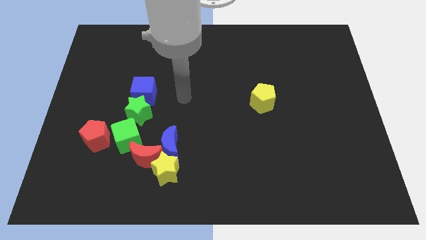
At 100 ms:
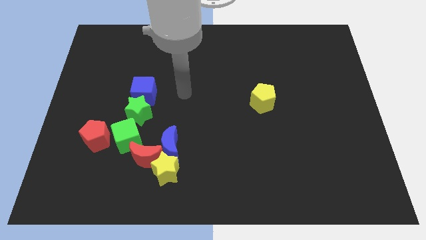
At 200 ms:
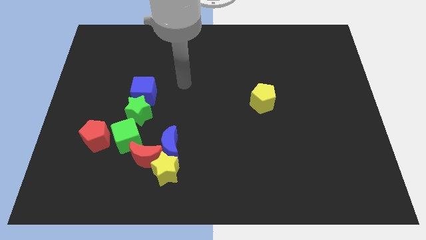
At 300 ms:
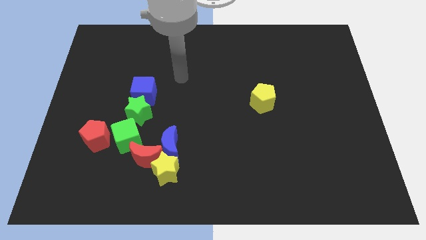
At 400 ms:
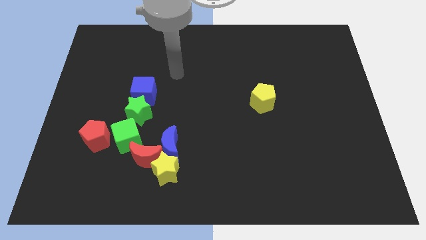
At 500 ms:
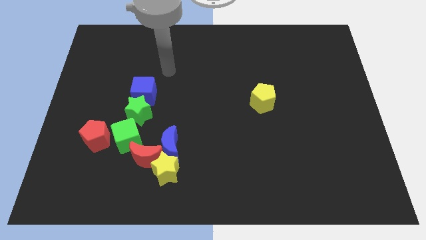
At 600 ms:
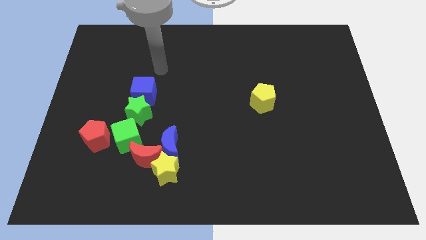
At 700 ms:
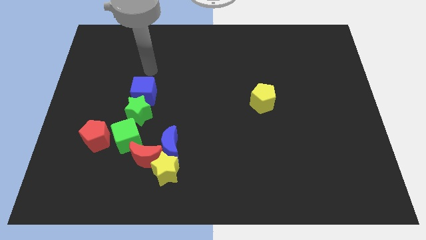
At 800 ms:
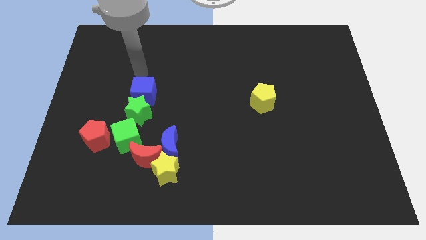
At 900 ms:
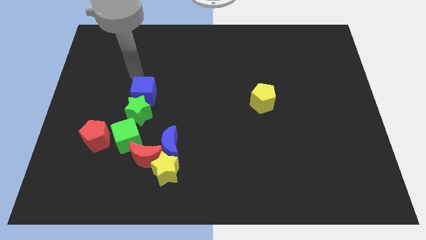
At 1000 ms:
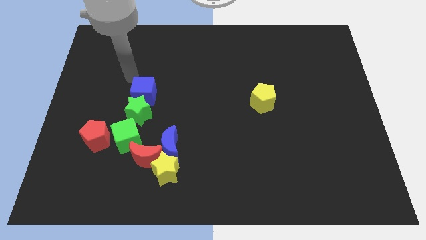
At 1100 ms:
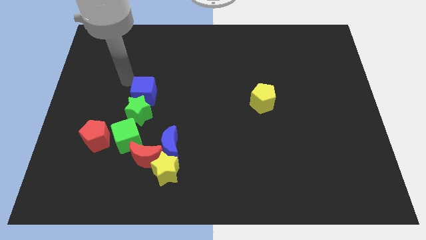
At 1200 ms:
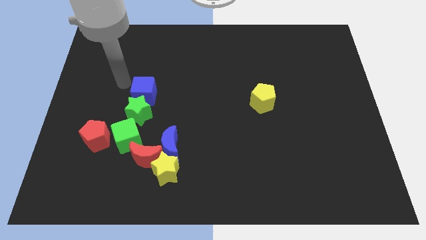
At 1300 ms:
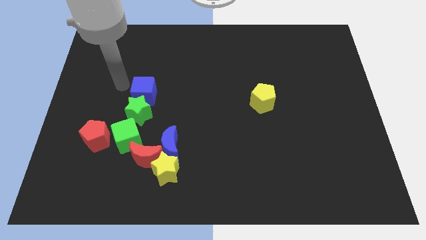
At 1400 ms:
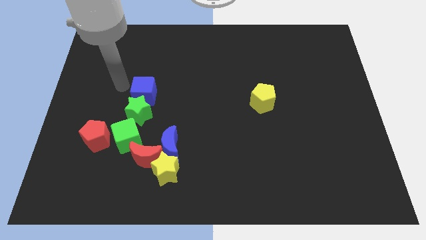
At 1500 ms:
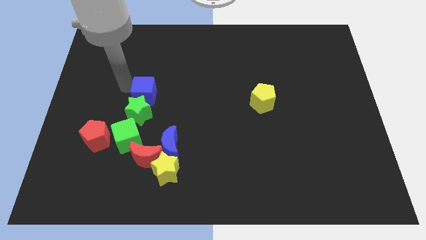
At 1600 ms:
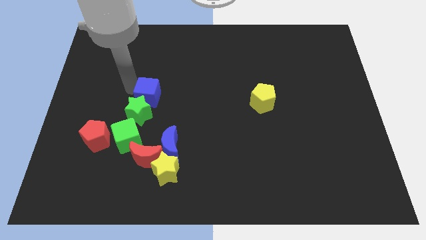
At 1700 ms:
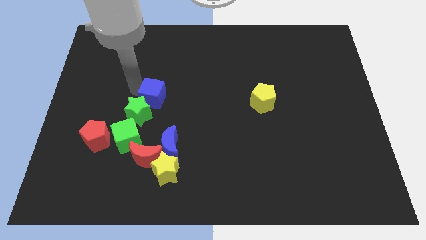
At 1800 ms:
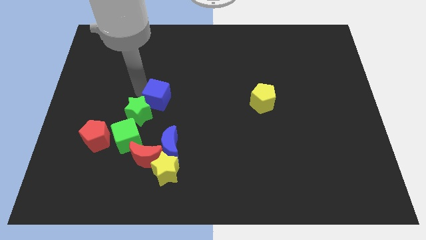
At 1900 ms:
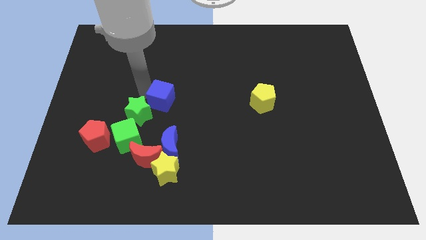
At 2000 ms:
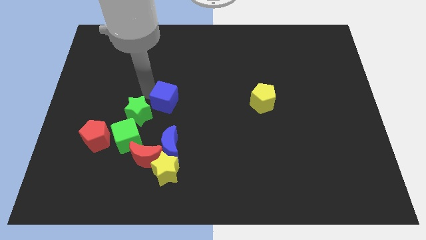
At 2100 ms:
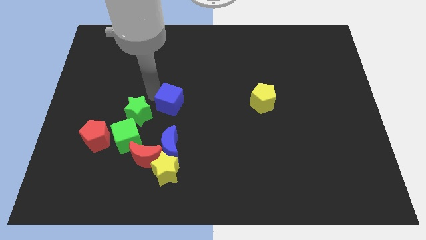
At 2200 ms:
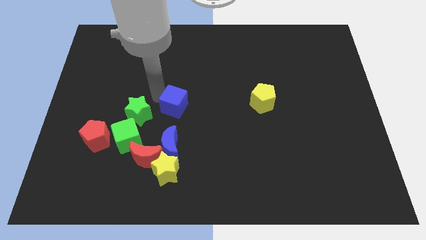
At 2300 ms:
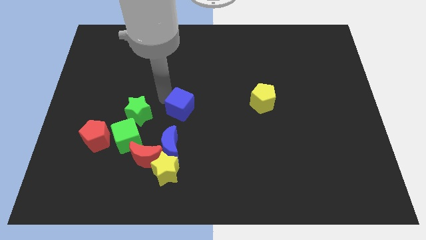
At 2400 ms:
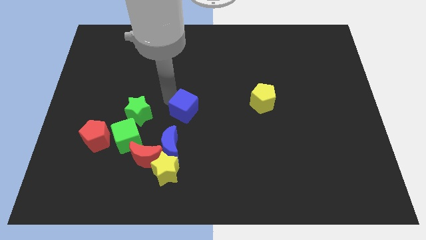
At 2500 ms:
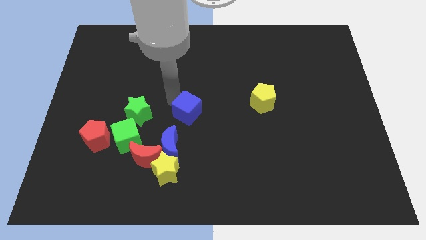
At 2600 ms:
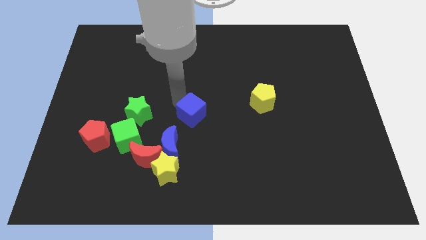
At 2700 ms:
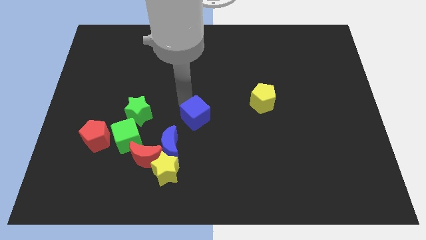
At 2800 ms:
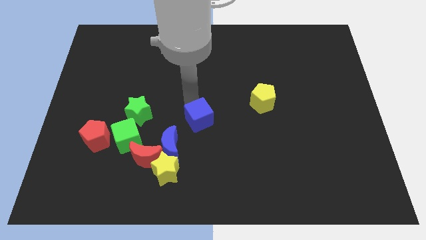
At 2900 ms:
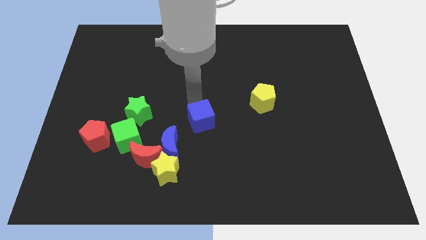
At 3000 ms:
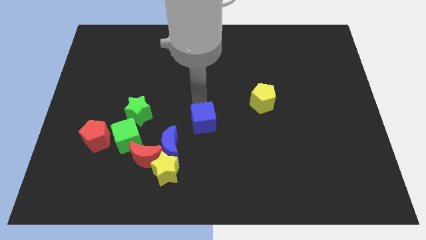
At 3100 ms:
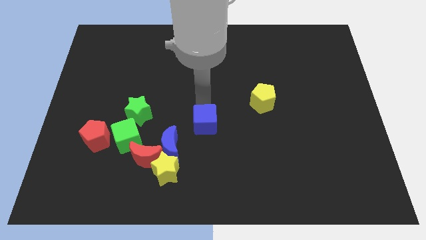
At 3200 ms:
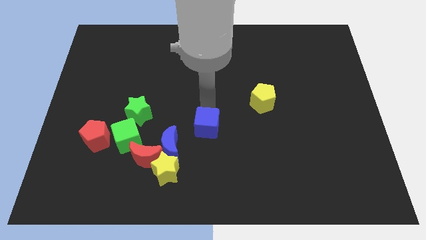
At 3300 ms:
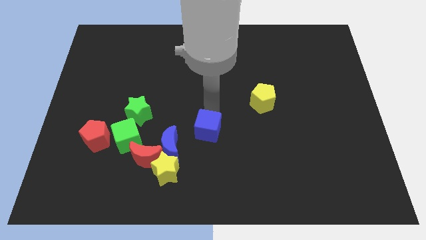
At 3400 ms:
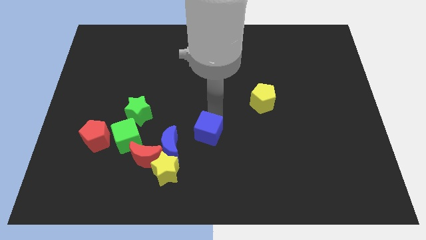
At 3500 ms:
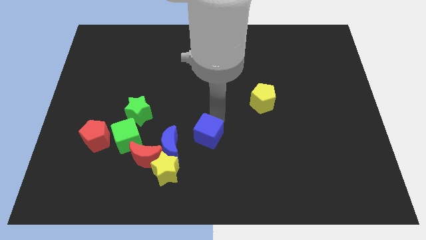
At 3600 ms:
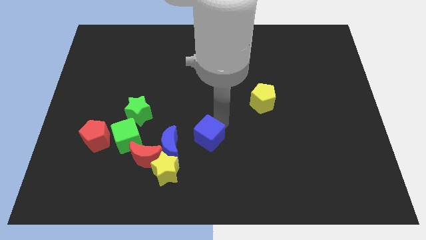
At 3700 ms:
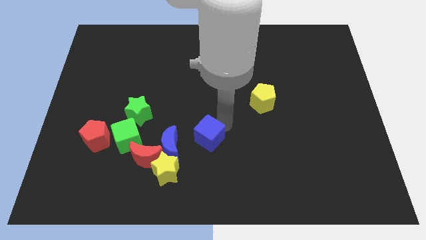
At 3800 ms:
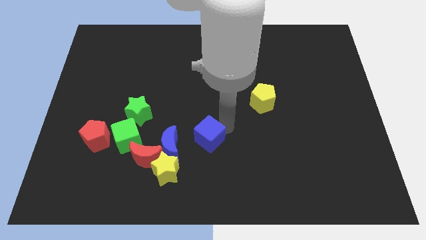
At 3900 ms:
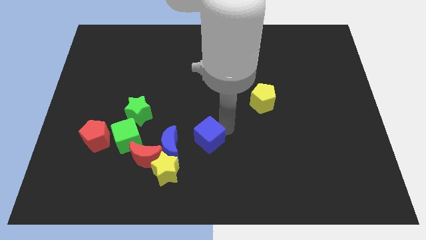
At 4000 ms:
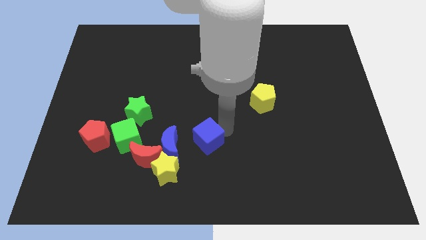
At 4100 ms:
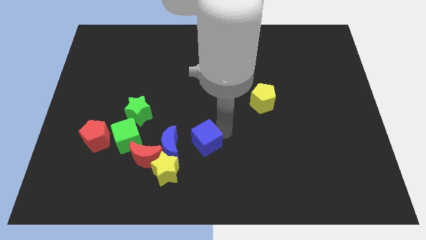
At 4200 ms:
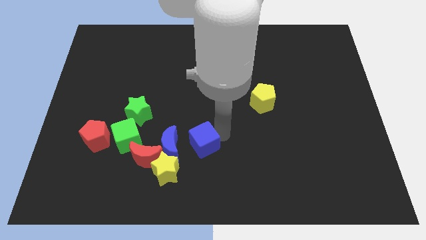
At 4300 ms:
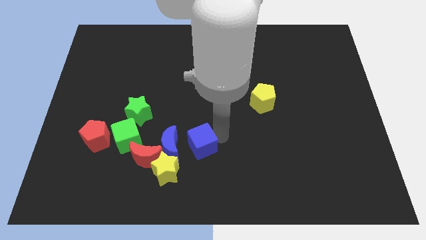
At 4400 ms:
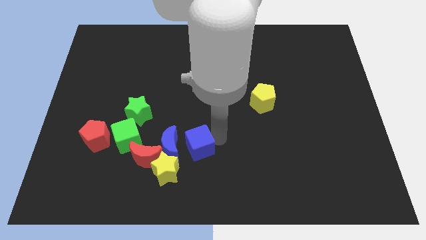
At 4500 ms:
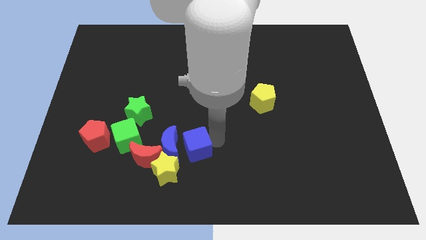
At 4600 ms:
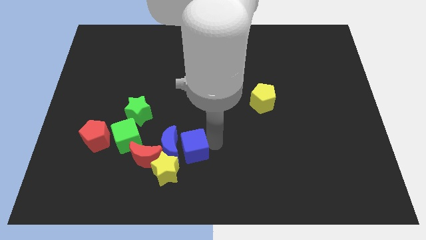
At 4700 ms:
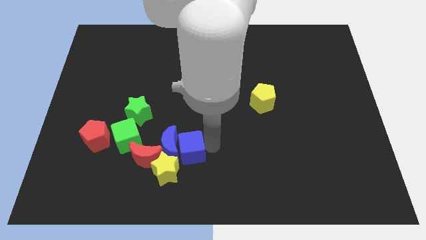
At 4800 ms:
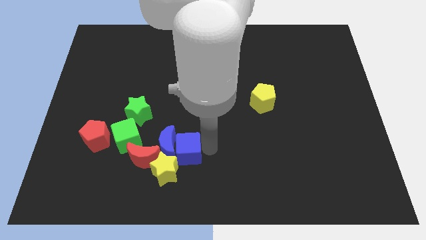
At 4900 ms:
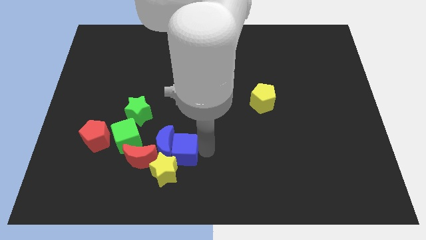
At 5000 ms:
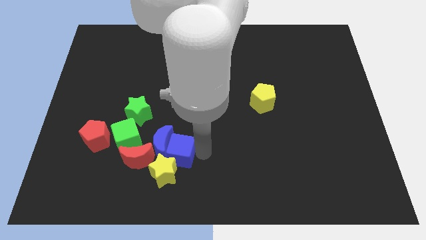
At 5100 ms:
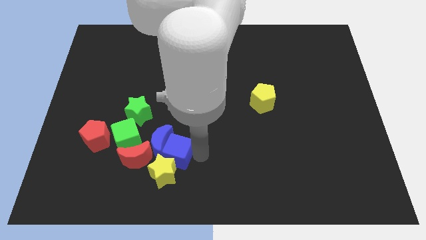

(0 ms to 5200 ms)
slide the blue cube to the yellow star

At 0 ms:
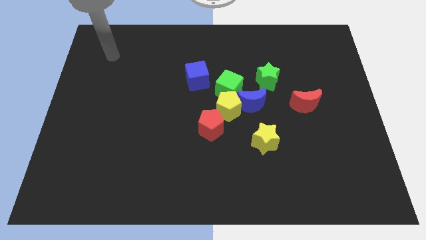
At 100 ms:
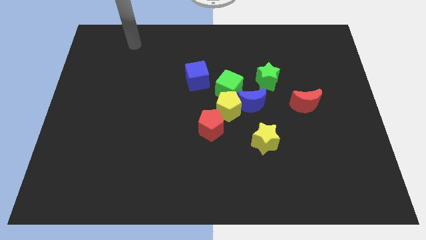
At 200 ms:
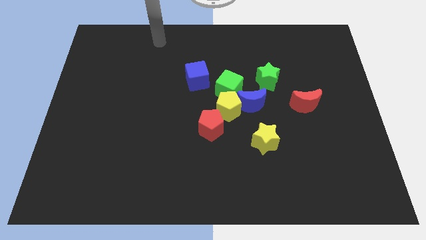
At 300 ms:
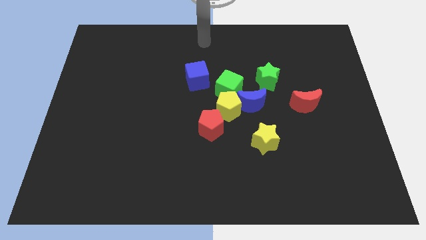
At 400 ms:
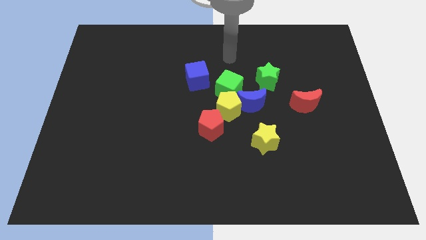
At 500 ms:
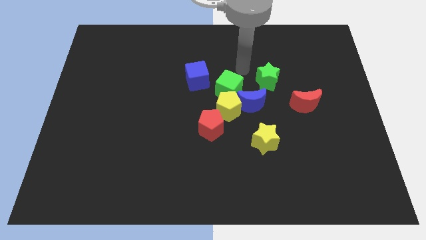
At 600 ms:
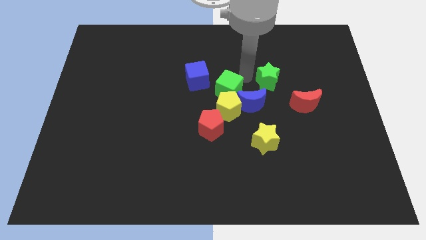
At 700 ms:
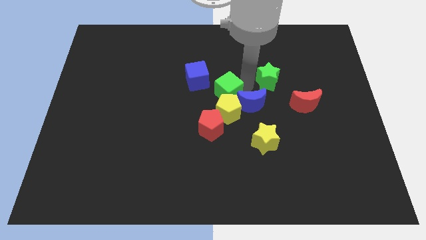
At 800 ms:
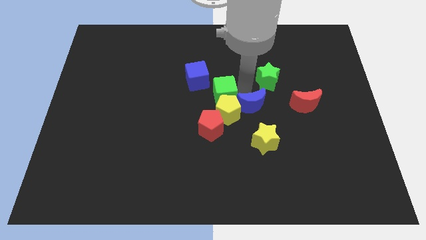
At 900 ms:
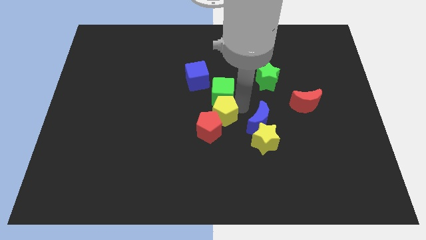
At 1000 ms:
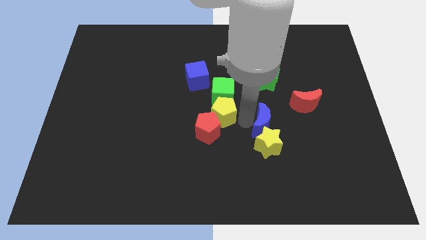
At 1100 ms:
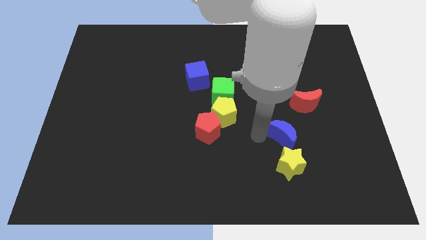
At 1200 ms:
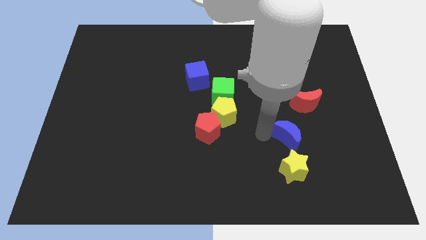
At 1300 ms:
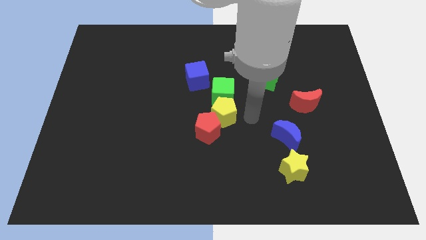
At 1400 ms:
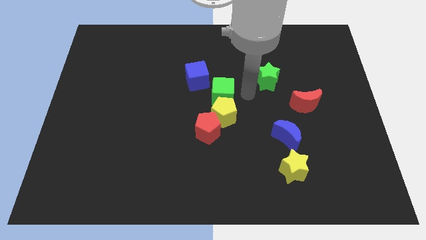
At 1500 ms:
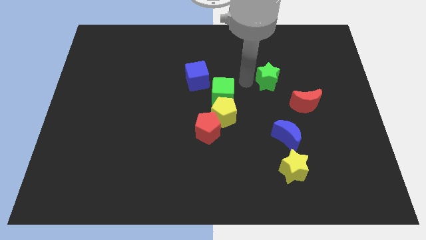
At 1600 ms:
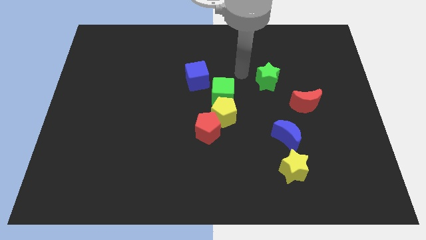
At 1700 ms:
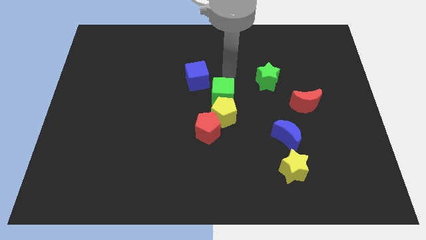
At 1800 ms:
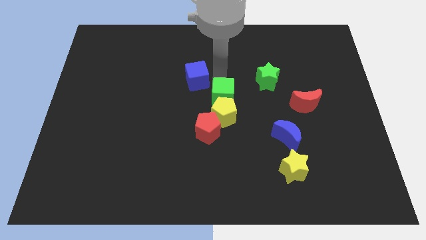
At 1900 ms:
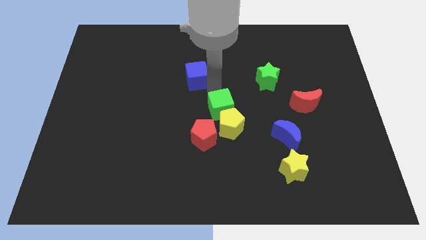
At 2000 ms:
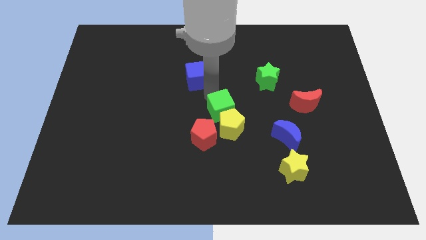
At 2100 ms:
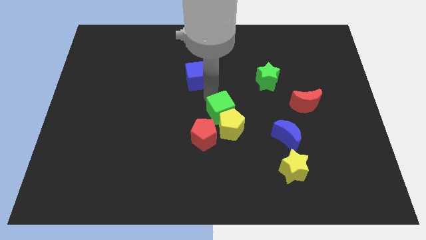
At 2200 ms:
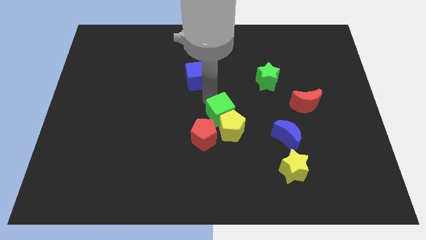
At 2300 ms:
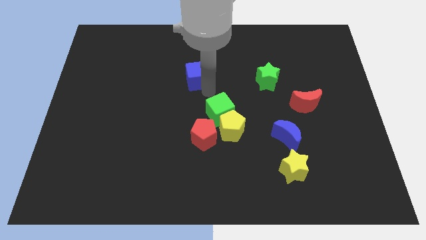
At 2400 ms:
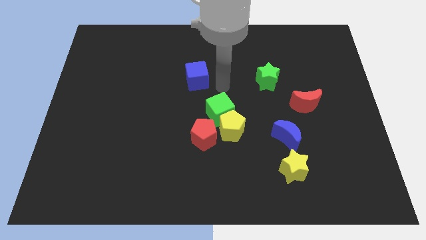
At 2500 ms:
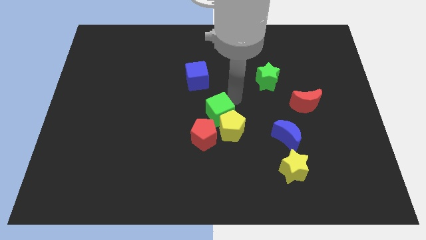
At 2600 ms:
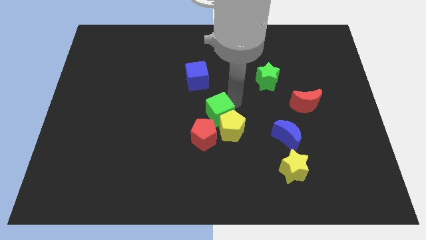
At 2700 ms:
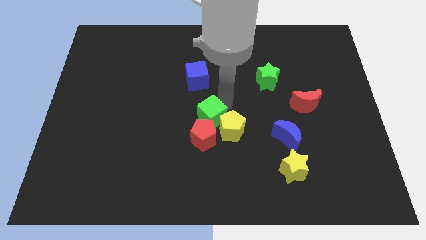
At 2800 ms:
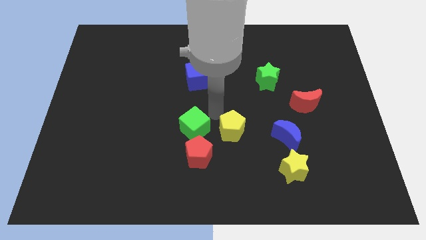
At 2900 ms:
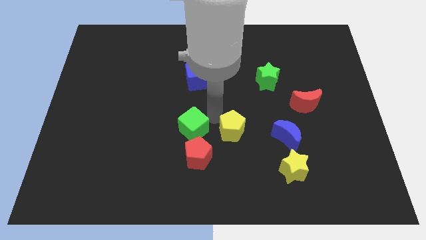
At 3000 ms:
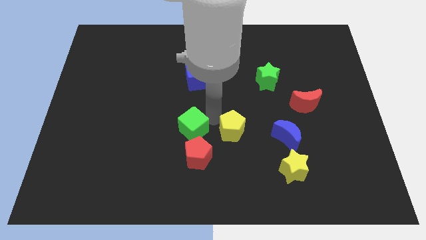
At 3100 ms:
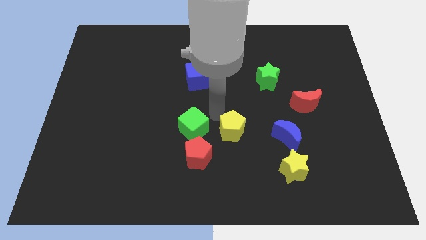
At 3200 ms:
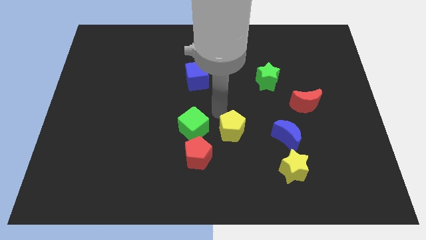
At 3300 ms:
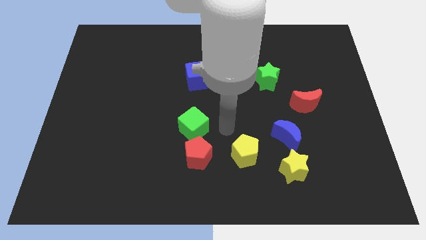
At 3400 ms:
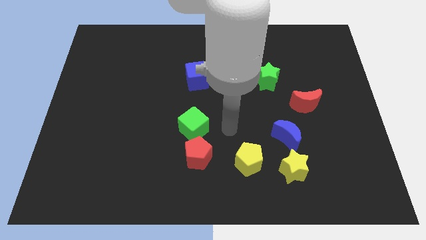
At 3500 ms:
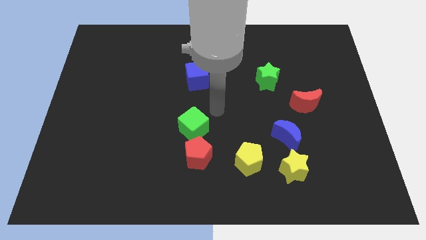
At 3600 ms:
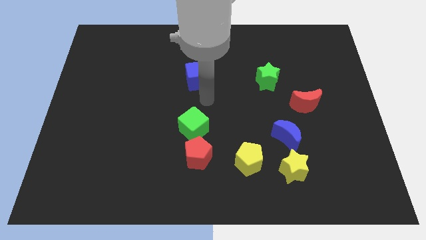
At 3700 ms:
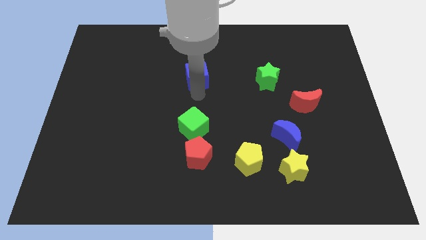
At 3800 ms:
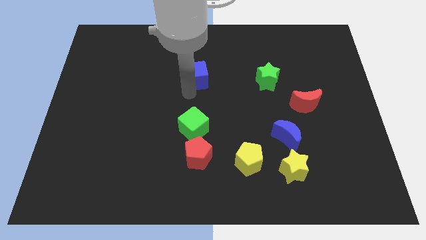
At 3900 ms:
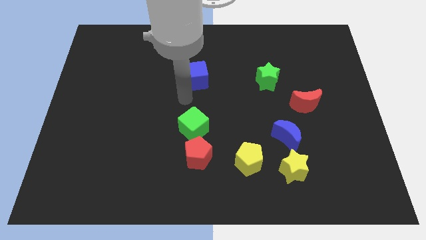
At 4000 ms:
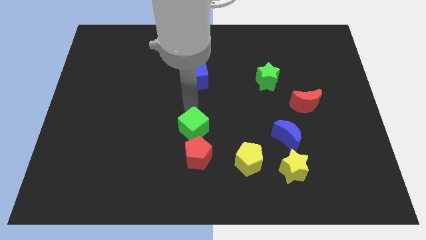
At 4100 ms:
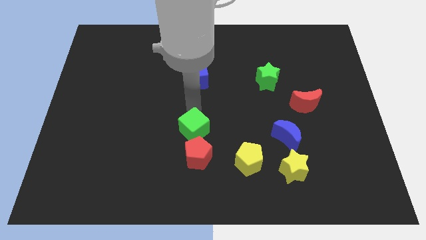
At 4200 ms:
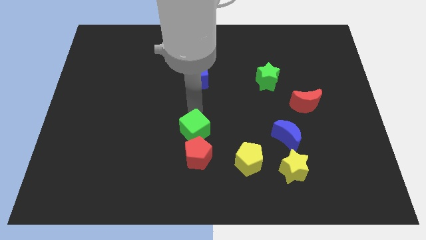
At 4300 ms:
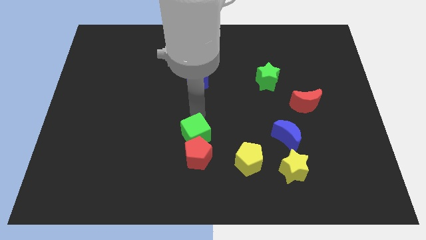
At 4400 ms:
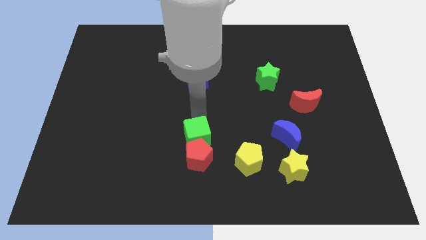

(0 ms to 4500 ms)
put the green cube to the red pentagon
